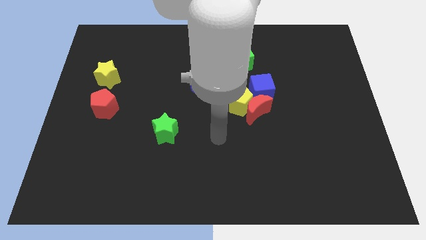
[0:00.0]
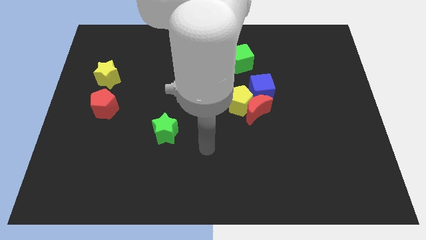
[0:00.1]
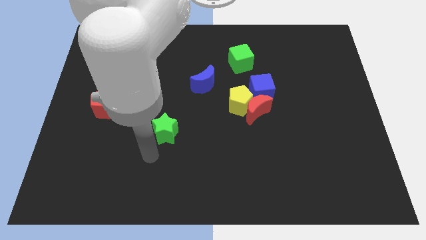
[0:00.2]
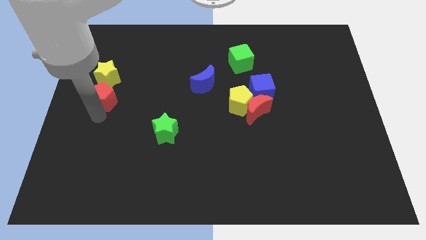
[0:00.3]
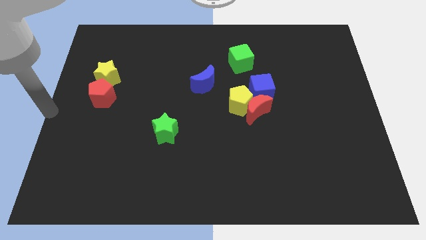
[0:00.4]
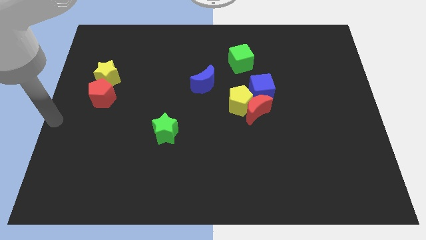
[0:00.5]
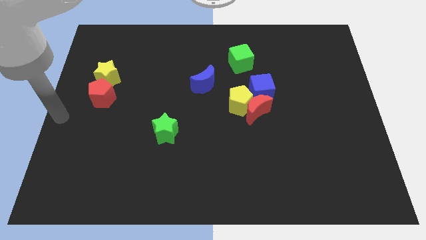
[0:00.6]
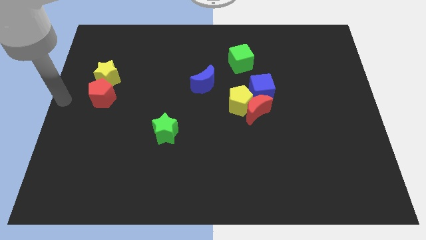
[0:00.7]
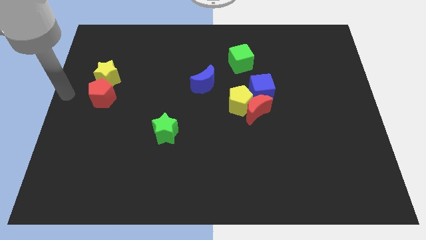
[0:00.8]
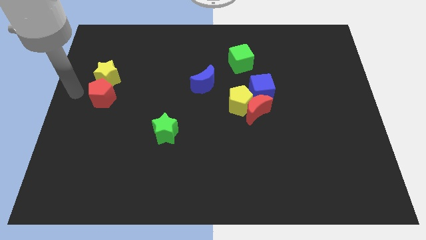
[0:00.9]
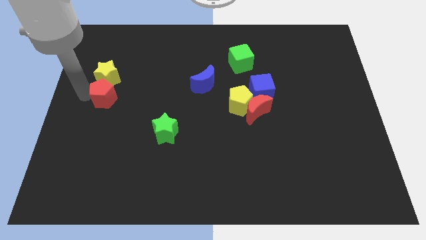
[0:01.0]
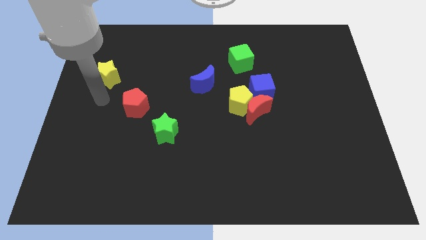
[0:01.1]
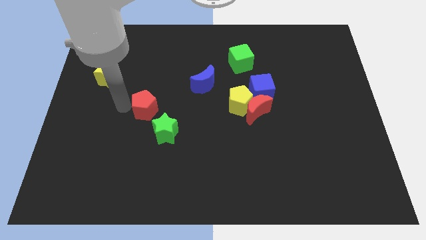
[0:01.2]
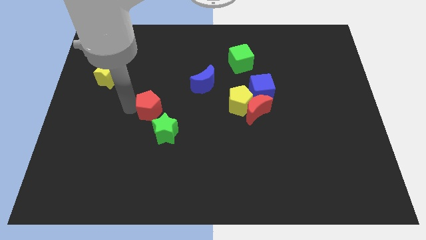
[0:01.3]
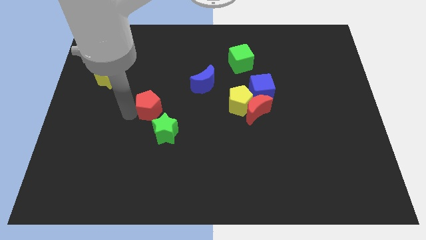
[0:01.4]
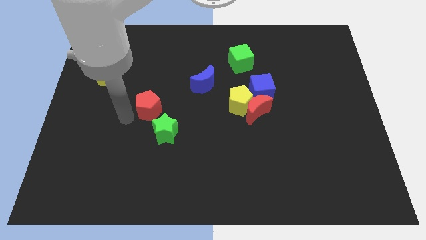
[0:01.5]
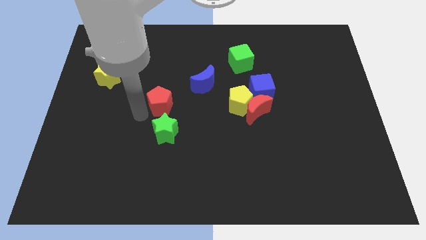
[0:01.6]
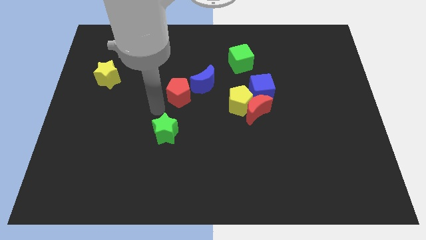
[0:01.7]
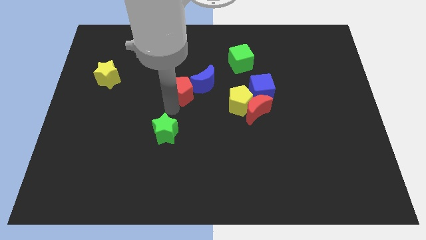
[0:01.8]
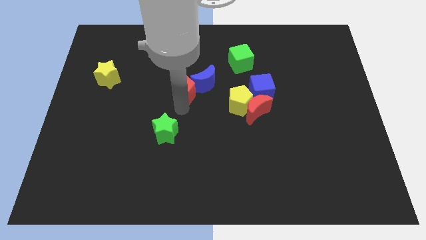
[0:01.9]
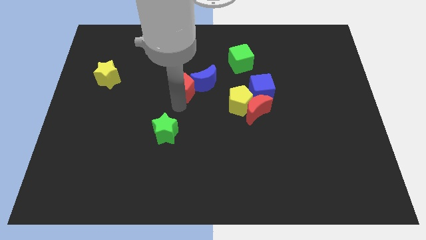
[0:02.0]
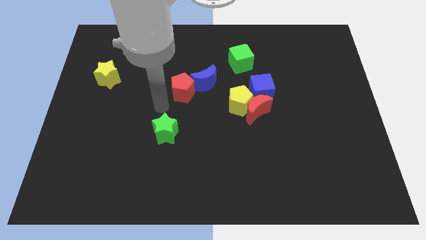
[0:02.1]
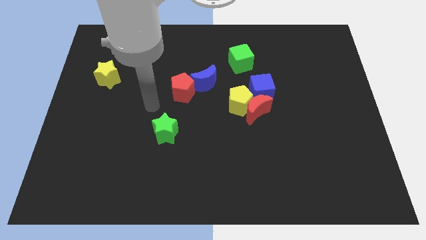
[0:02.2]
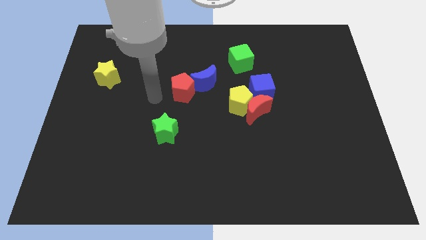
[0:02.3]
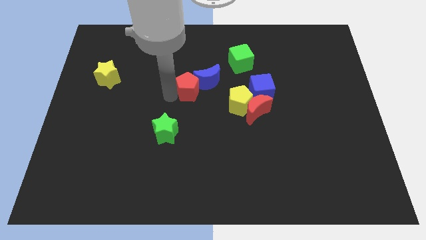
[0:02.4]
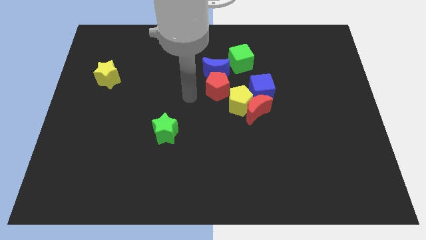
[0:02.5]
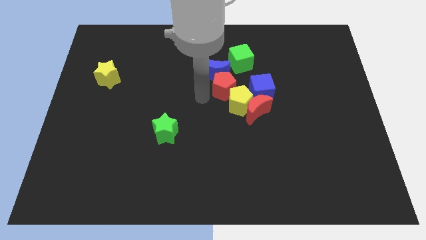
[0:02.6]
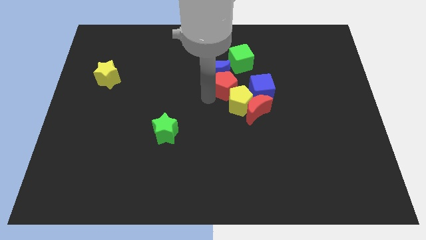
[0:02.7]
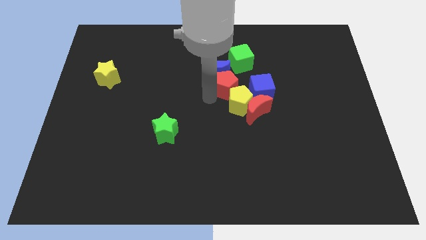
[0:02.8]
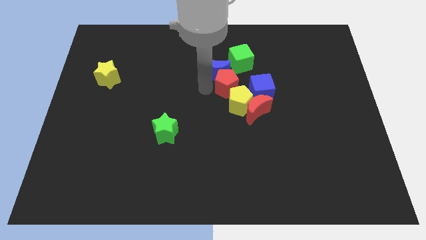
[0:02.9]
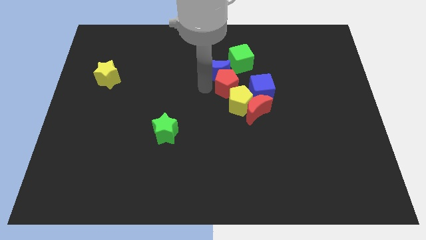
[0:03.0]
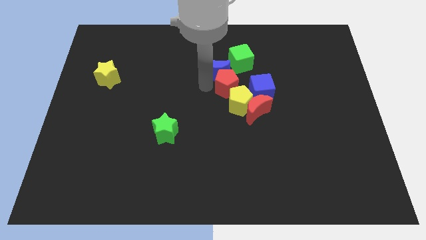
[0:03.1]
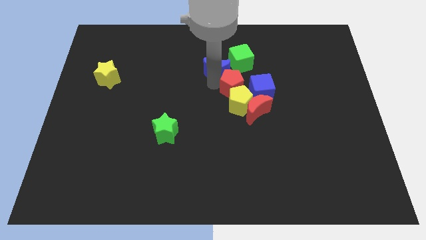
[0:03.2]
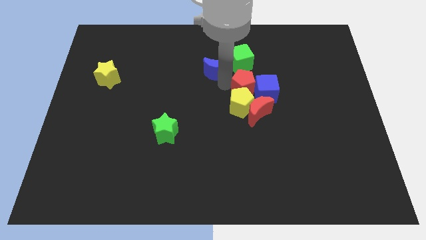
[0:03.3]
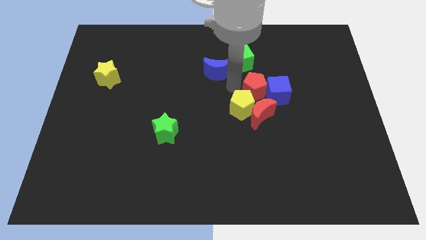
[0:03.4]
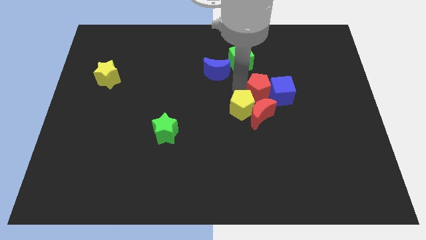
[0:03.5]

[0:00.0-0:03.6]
move the red pentagon next to the blue cube

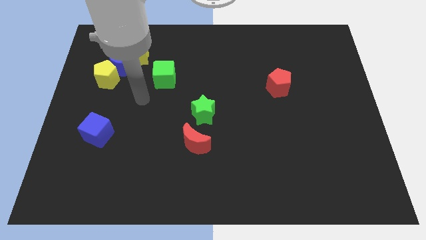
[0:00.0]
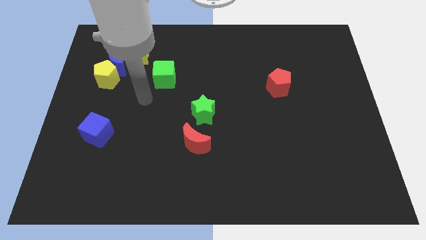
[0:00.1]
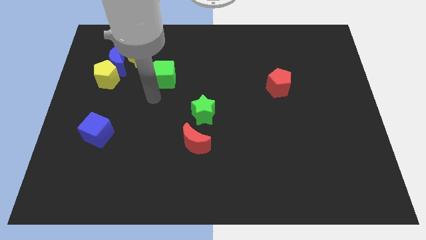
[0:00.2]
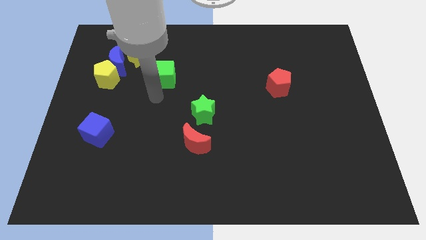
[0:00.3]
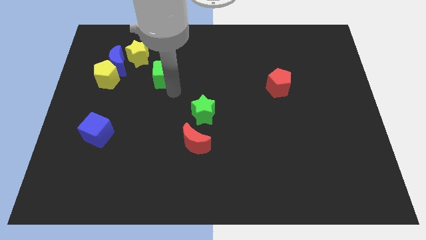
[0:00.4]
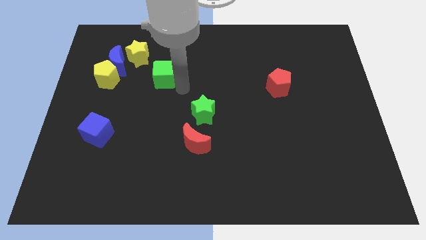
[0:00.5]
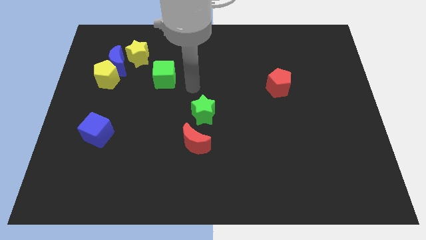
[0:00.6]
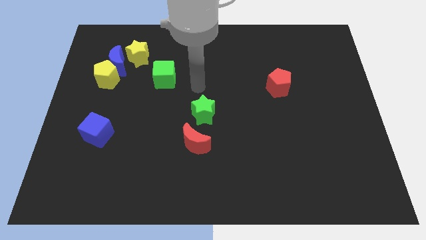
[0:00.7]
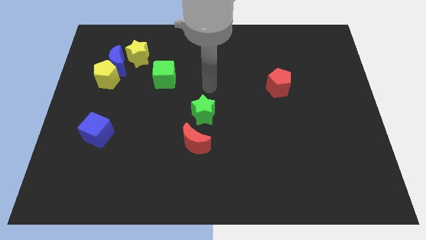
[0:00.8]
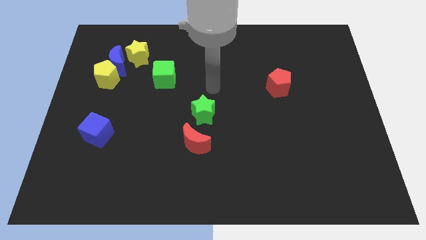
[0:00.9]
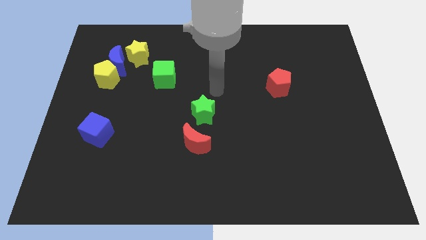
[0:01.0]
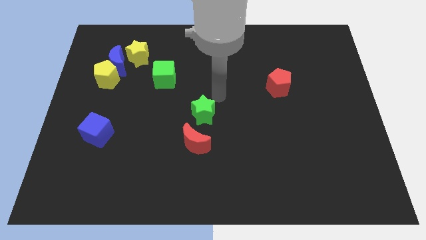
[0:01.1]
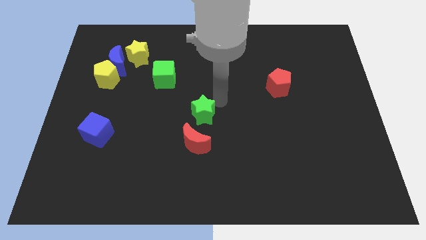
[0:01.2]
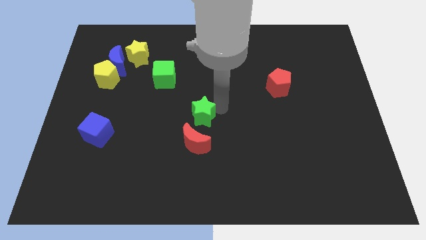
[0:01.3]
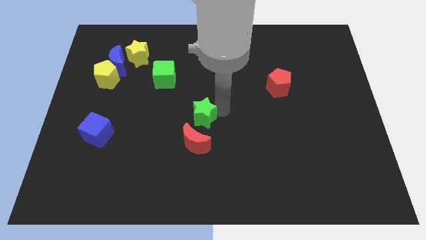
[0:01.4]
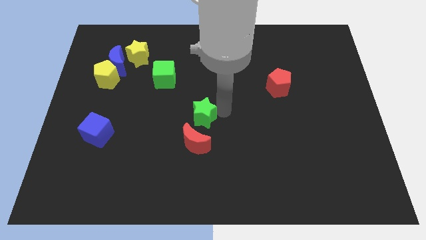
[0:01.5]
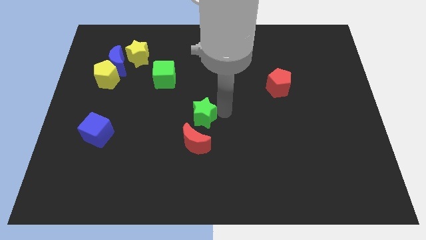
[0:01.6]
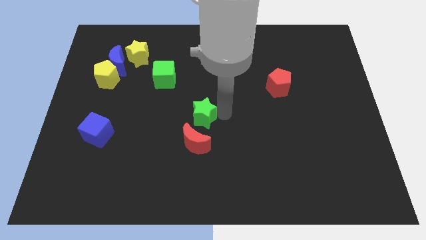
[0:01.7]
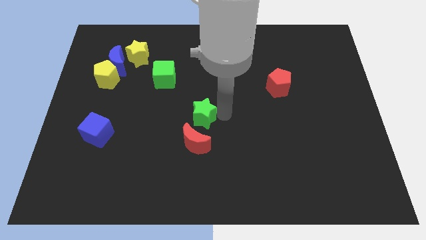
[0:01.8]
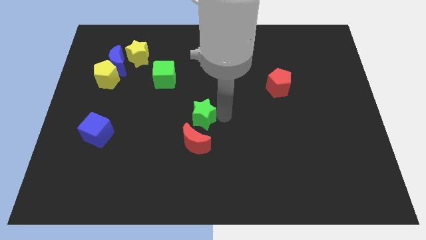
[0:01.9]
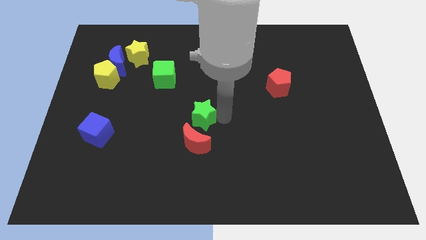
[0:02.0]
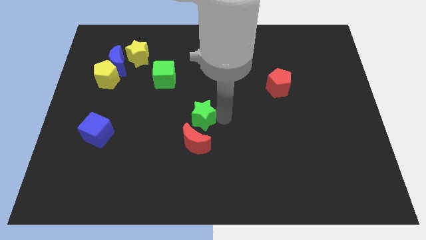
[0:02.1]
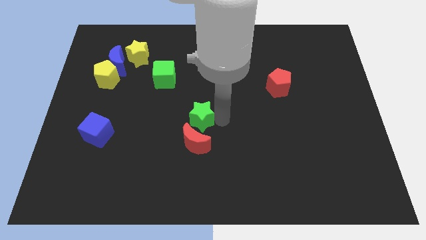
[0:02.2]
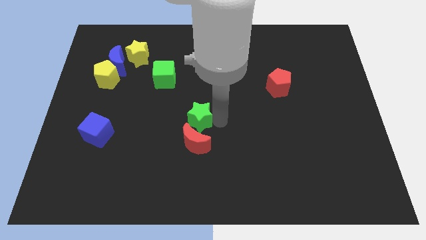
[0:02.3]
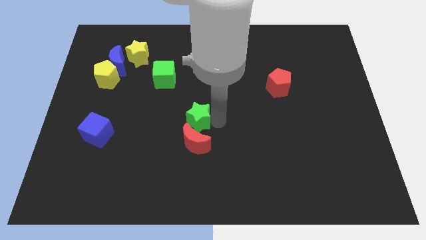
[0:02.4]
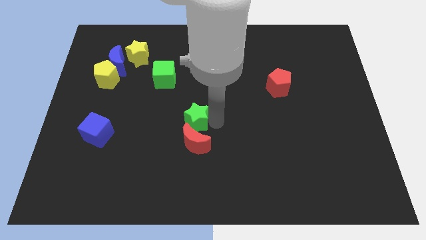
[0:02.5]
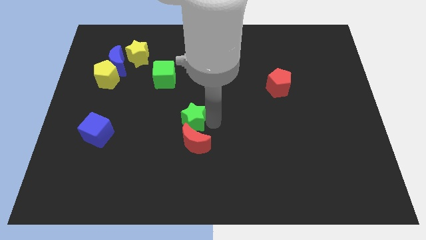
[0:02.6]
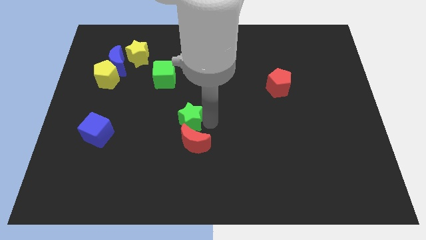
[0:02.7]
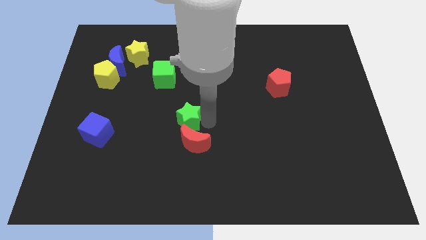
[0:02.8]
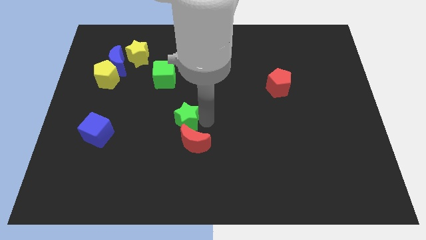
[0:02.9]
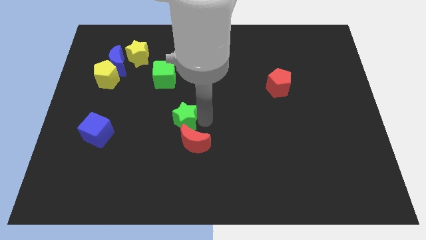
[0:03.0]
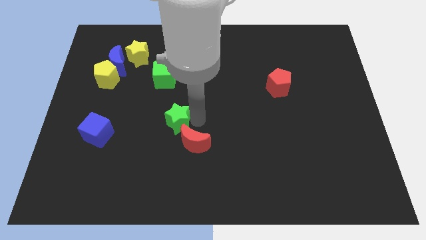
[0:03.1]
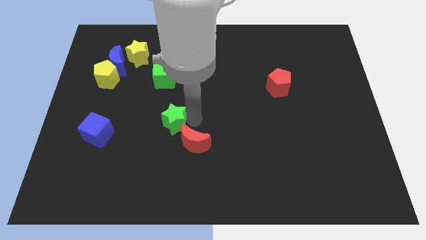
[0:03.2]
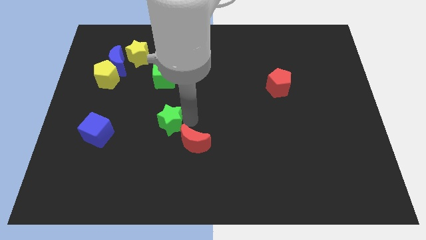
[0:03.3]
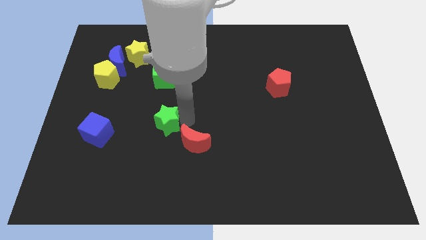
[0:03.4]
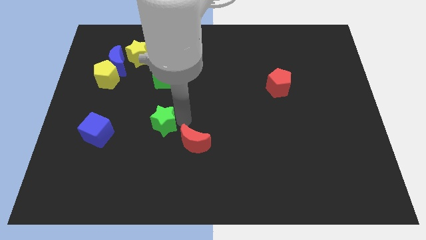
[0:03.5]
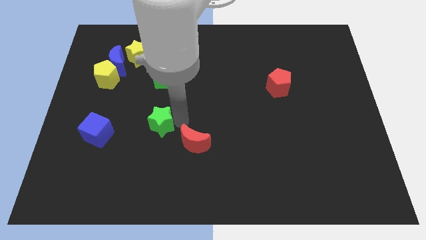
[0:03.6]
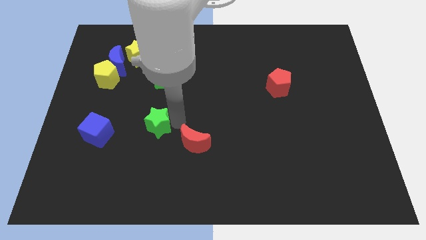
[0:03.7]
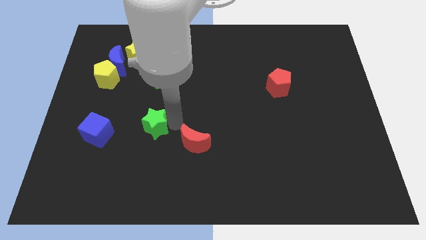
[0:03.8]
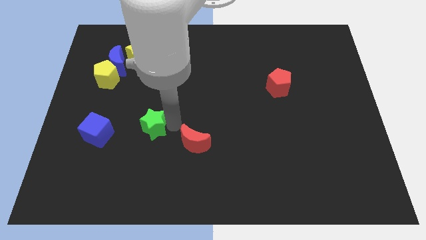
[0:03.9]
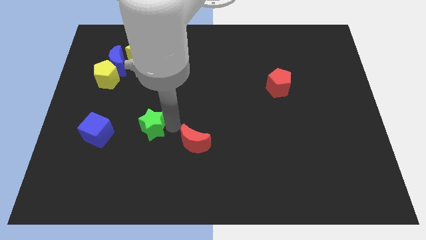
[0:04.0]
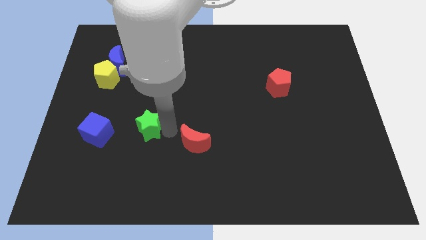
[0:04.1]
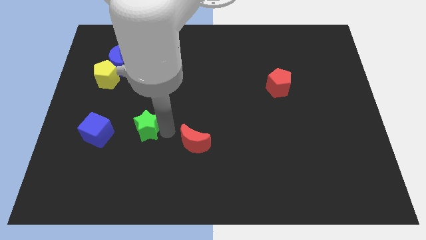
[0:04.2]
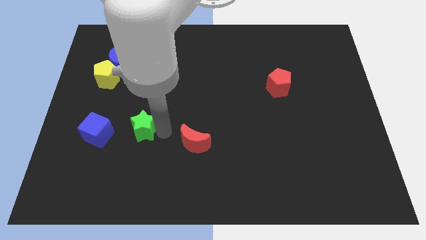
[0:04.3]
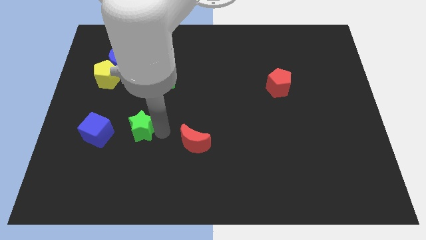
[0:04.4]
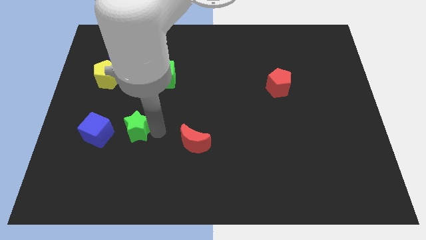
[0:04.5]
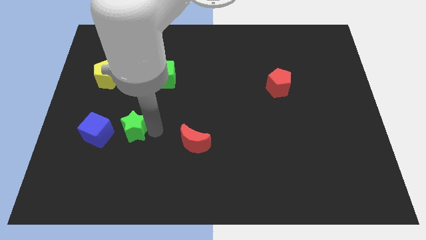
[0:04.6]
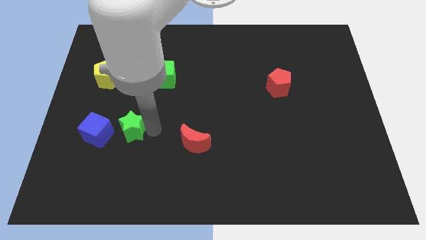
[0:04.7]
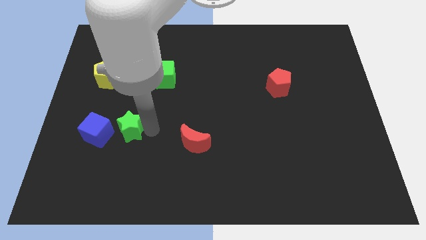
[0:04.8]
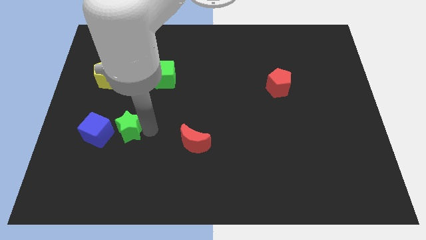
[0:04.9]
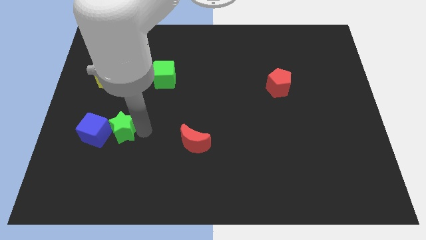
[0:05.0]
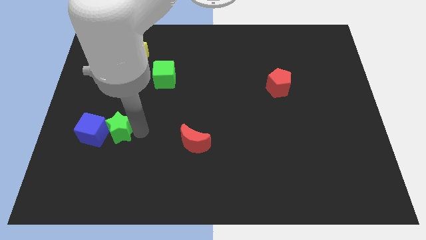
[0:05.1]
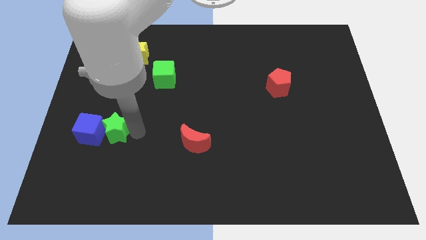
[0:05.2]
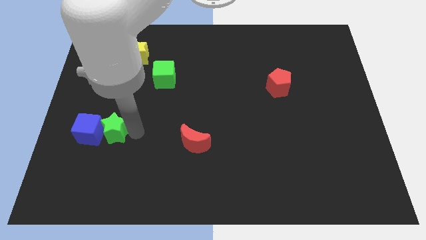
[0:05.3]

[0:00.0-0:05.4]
move the green star towards the blue cube
